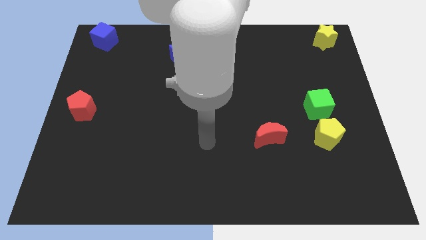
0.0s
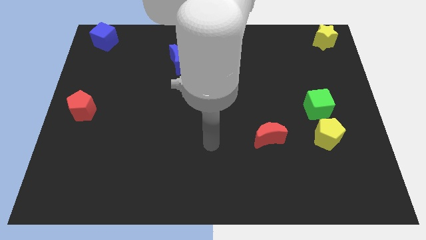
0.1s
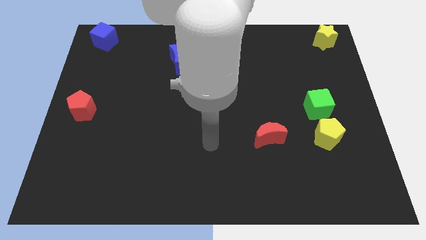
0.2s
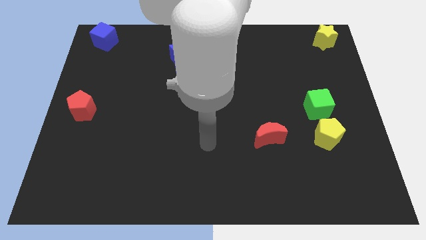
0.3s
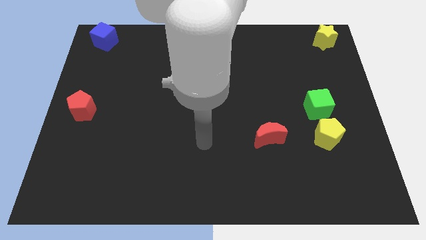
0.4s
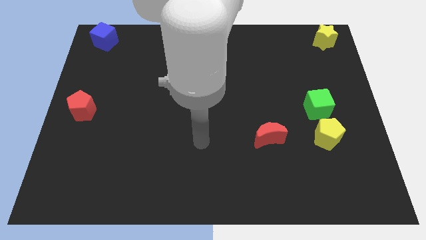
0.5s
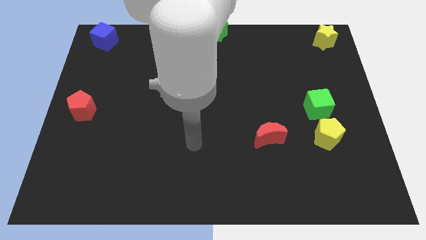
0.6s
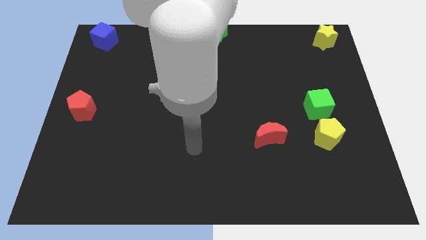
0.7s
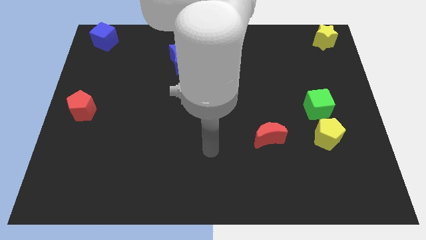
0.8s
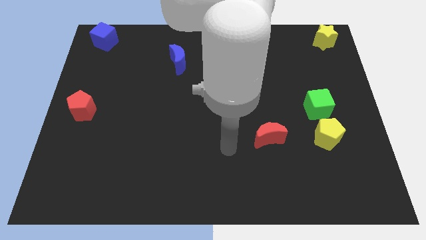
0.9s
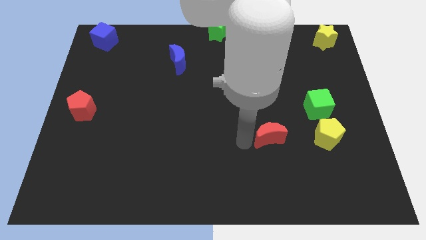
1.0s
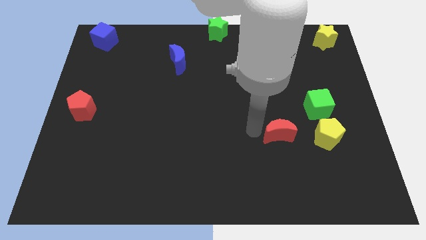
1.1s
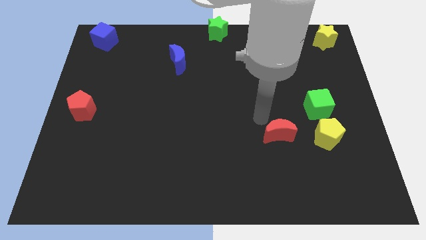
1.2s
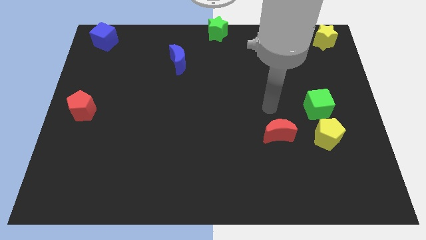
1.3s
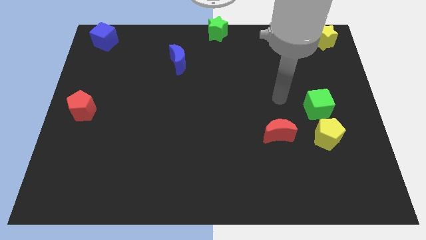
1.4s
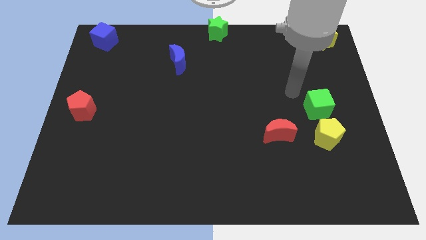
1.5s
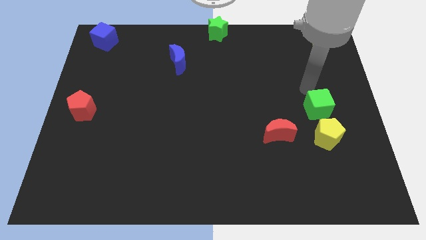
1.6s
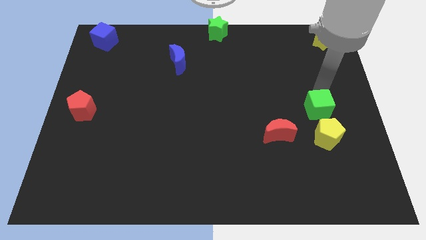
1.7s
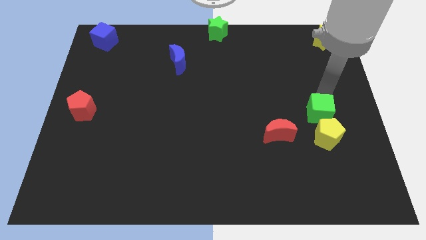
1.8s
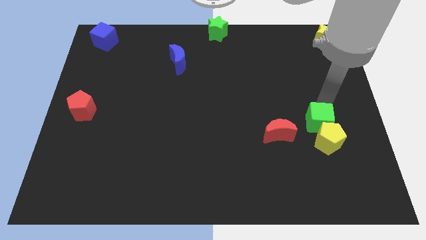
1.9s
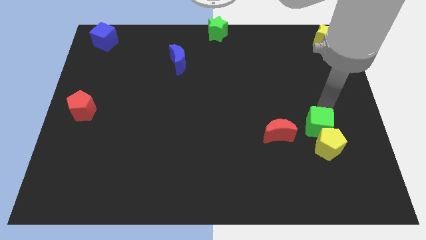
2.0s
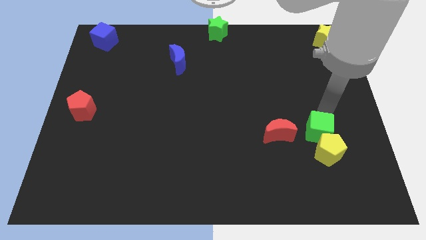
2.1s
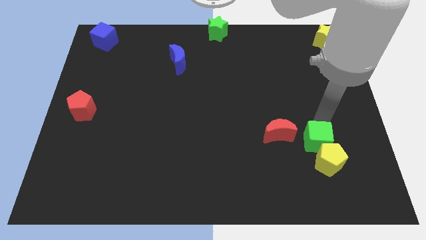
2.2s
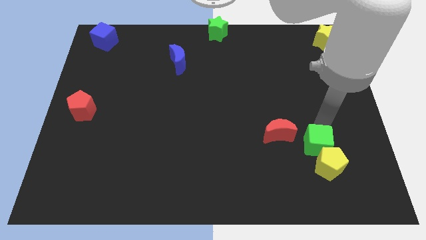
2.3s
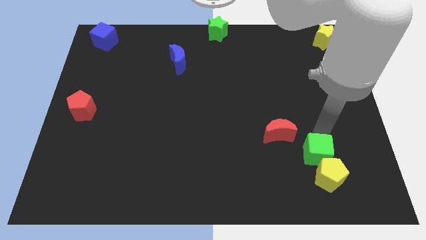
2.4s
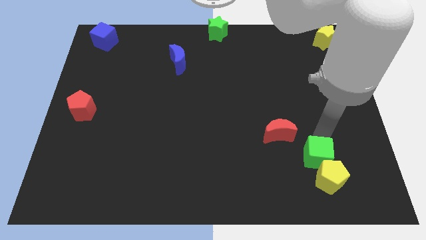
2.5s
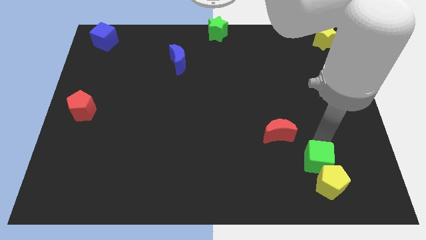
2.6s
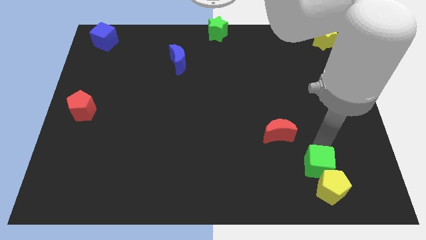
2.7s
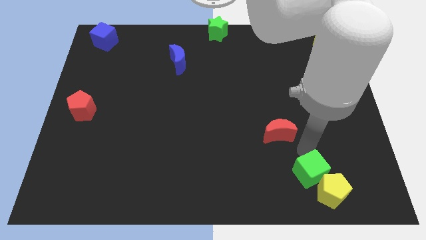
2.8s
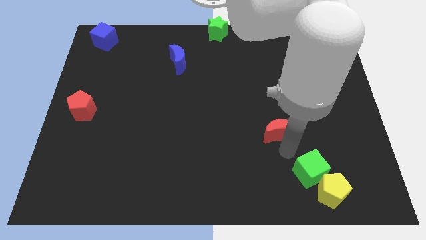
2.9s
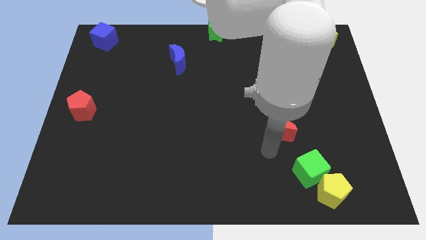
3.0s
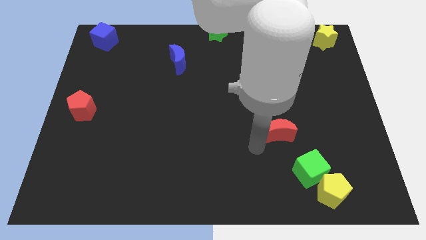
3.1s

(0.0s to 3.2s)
push yellow pentagon with the help of green cube

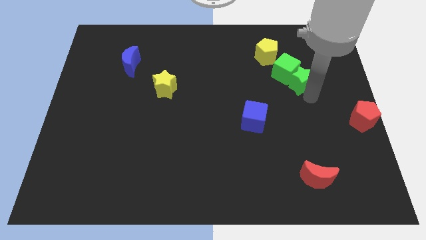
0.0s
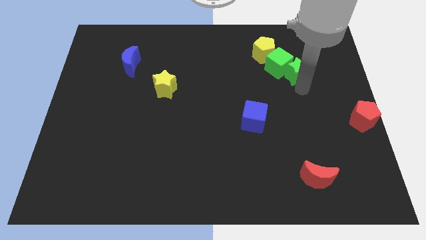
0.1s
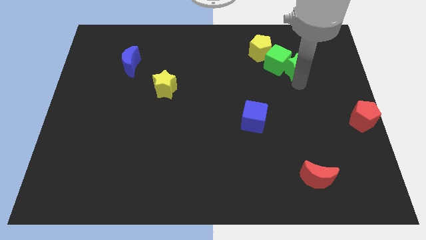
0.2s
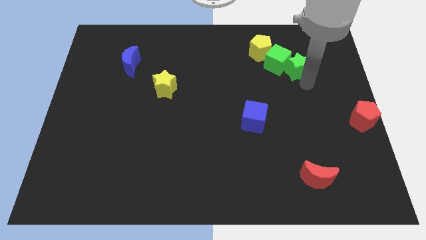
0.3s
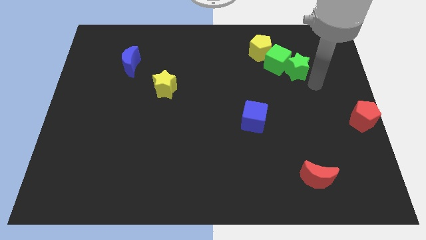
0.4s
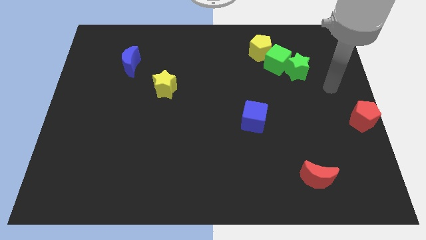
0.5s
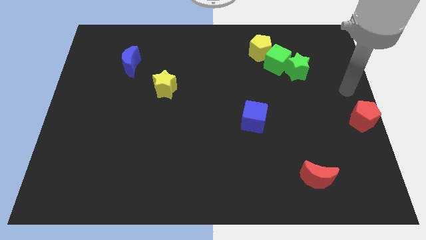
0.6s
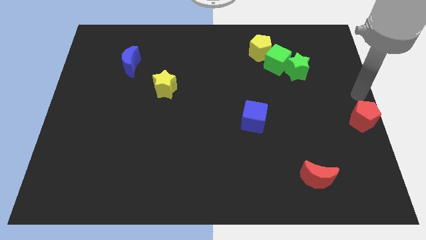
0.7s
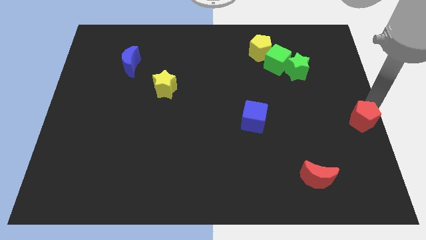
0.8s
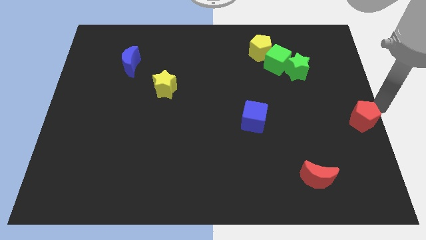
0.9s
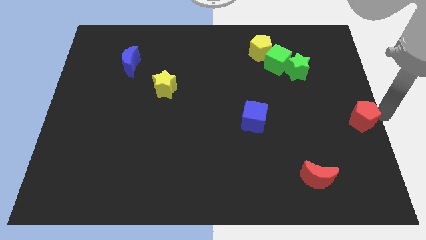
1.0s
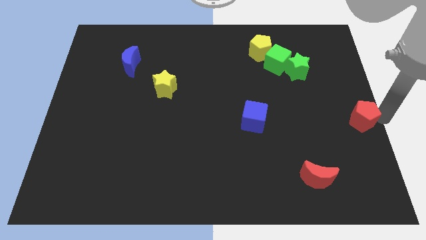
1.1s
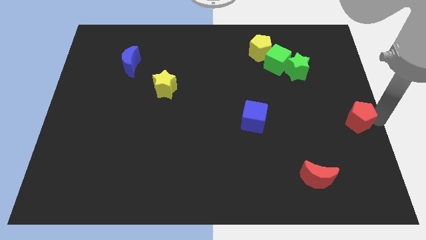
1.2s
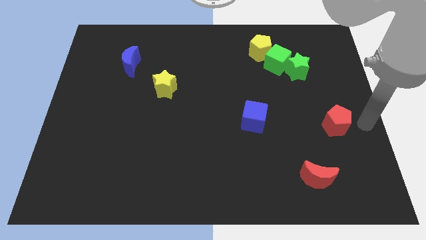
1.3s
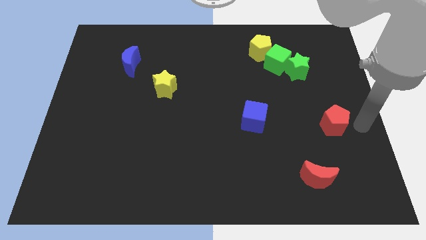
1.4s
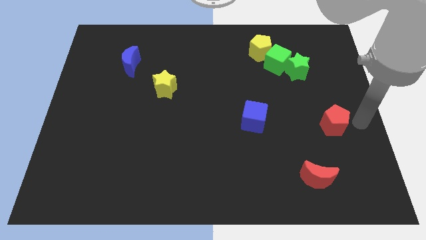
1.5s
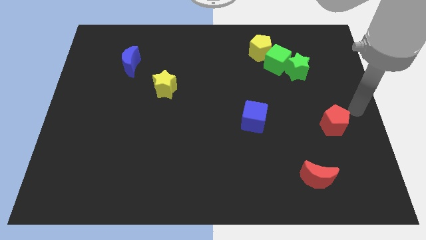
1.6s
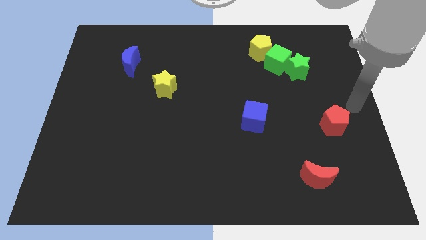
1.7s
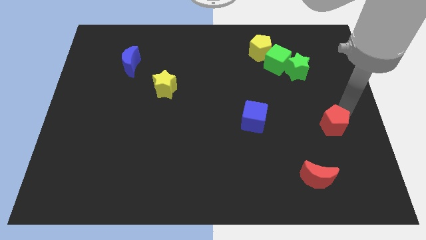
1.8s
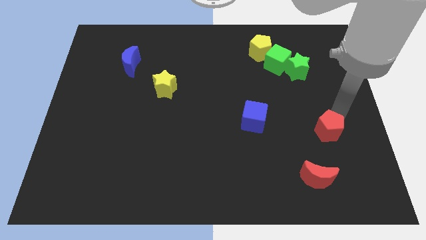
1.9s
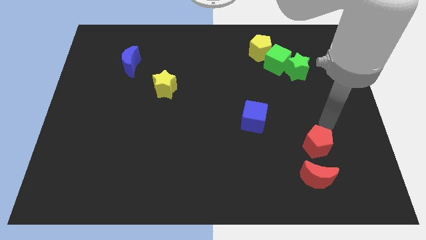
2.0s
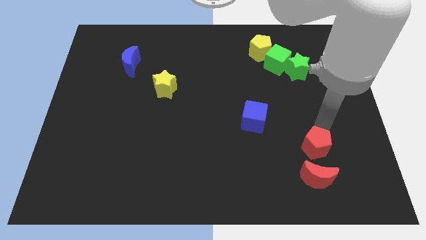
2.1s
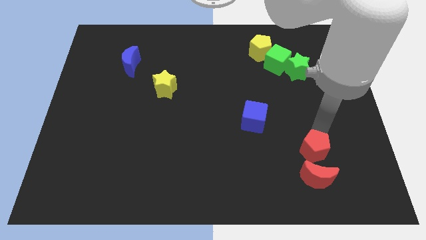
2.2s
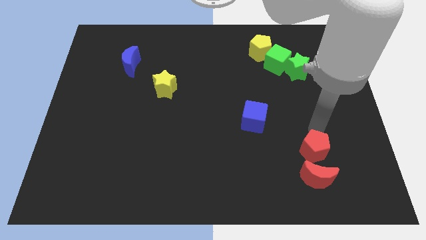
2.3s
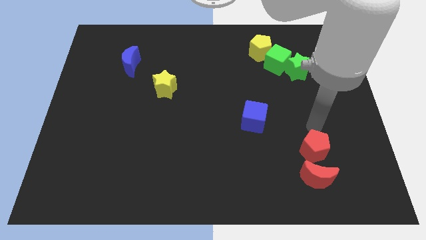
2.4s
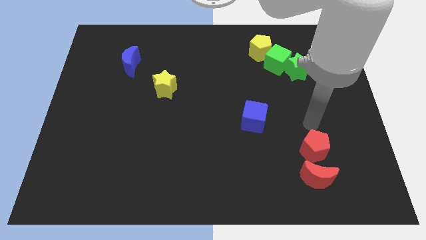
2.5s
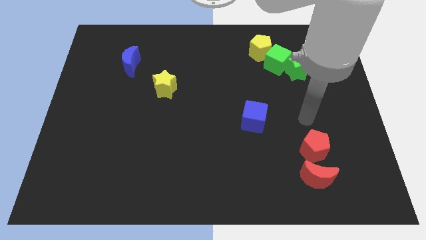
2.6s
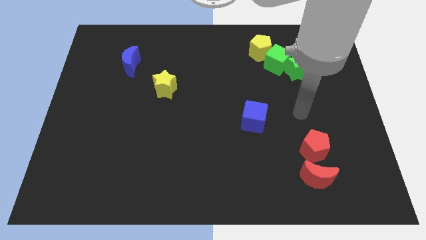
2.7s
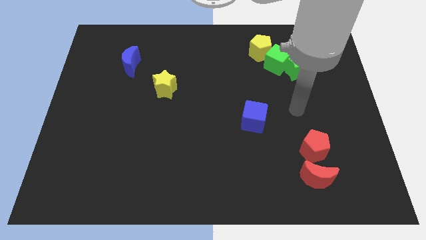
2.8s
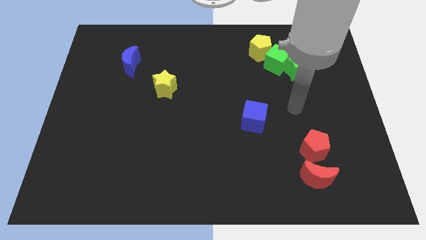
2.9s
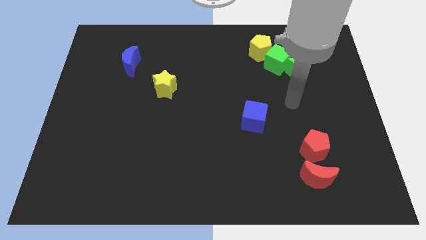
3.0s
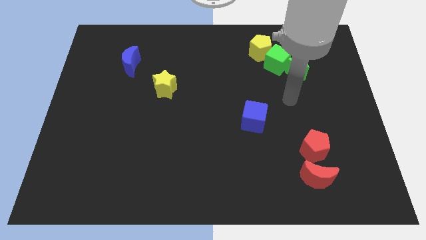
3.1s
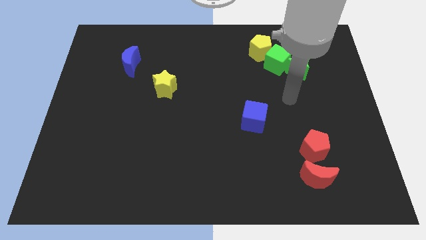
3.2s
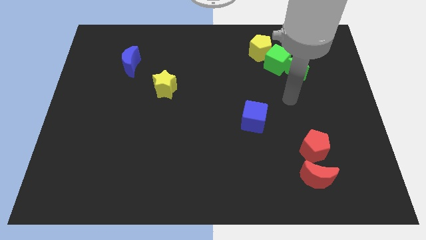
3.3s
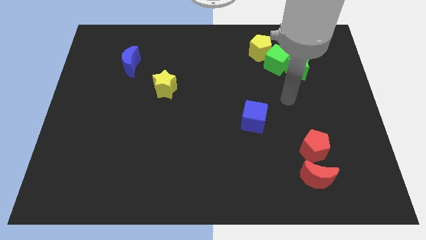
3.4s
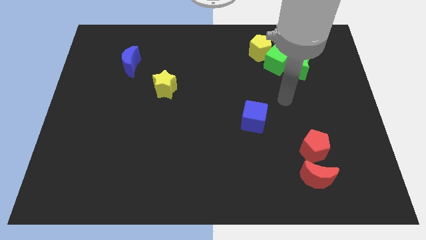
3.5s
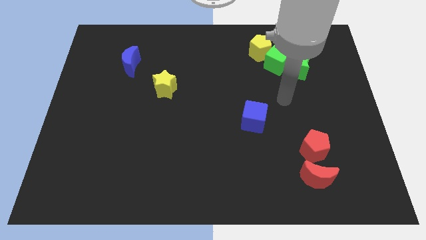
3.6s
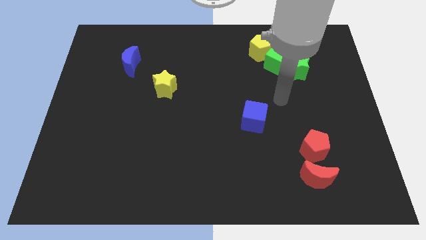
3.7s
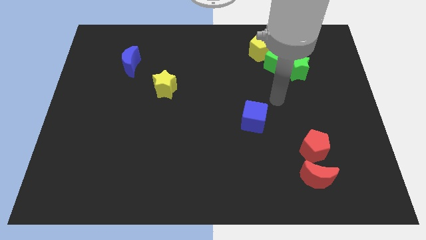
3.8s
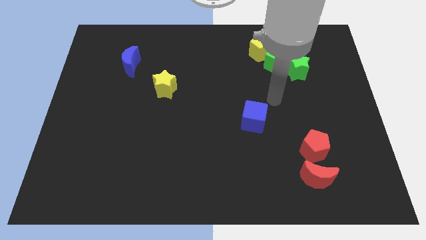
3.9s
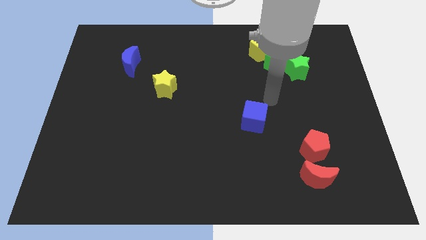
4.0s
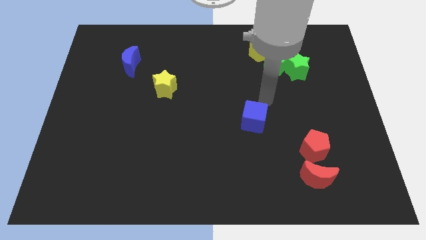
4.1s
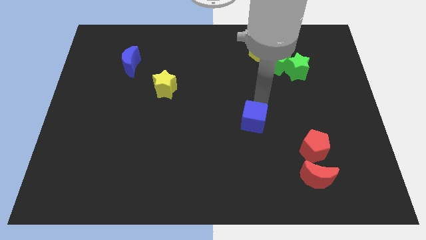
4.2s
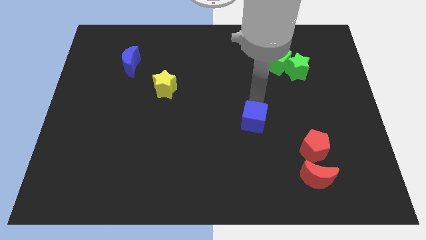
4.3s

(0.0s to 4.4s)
move the red pentagon to the top of the red crescent

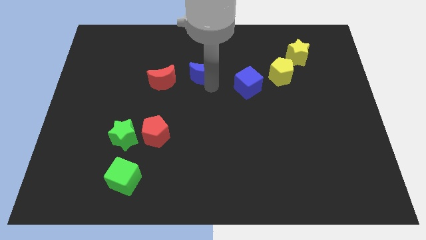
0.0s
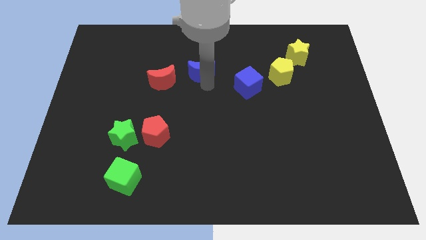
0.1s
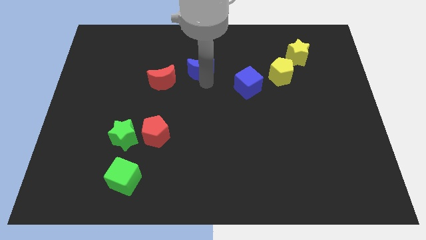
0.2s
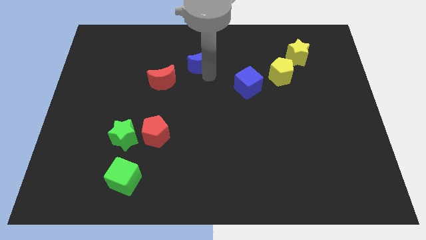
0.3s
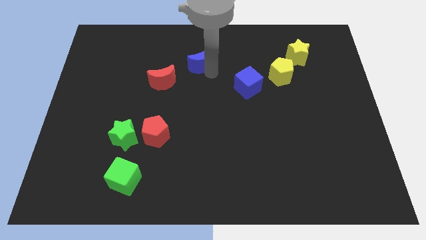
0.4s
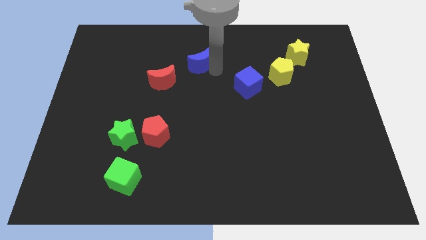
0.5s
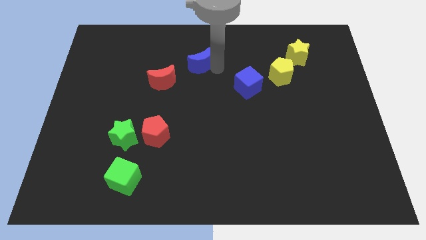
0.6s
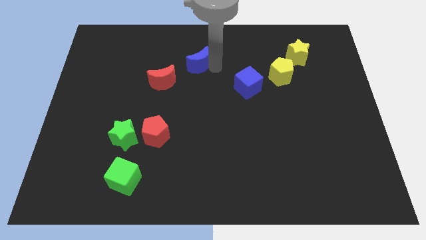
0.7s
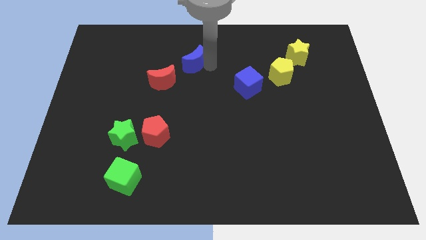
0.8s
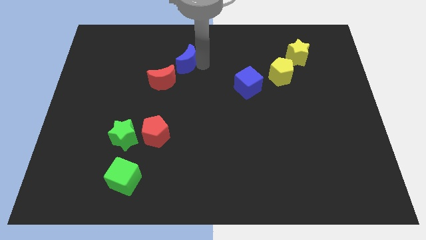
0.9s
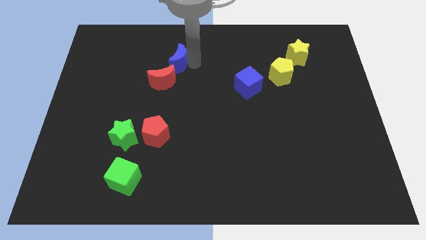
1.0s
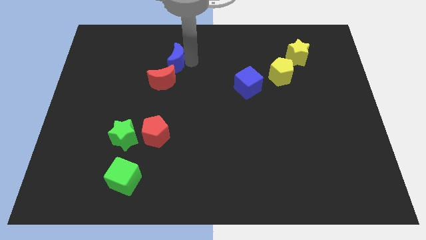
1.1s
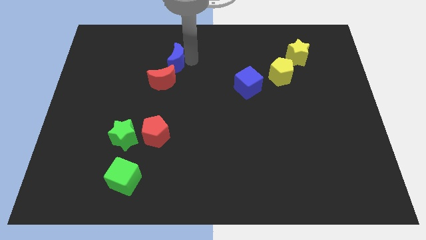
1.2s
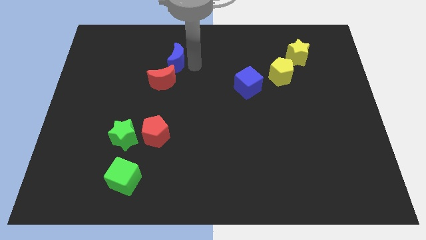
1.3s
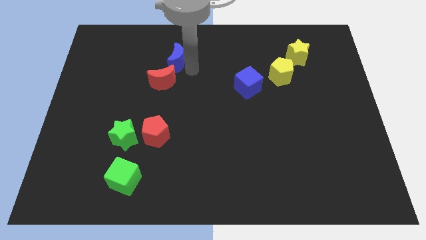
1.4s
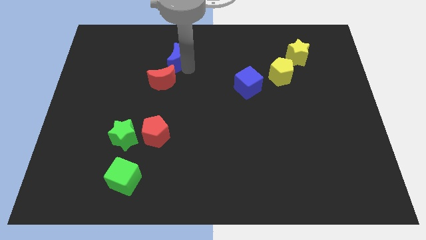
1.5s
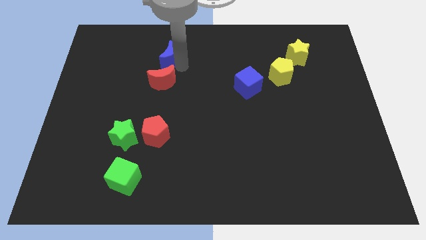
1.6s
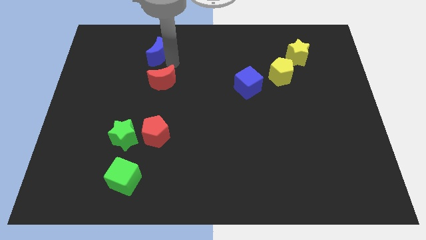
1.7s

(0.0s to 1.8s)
push the blue moon above right to the red moon
